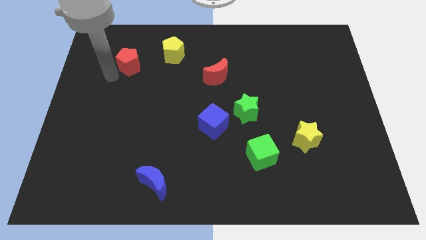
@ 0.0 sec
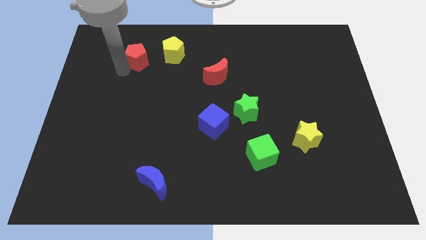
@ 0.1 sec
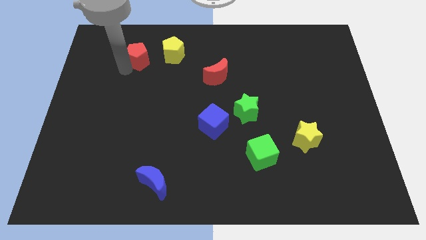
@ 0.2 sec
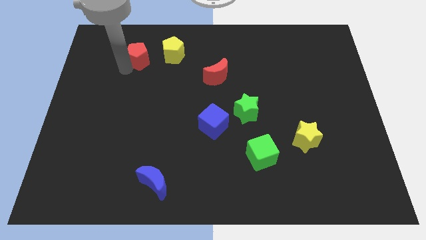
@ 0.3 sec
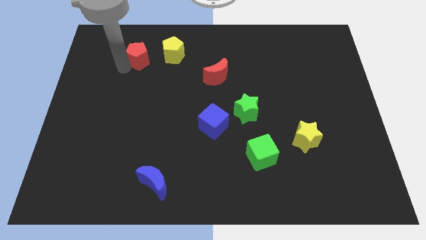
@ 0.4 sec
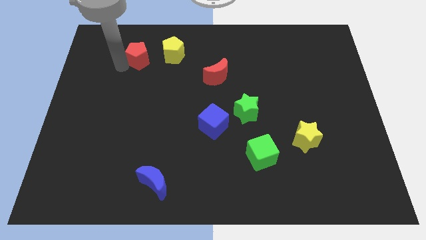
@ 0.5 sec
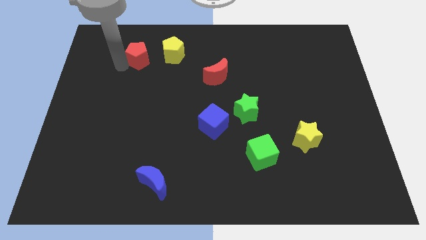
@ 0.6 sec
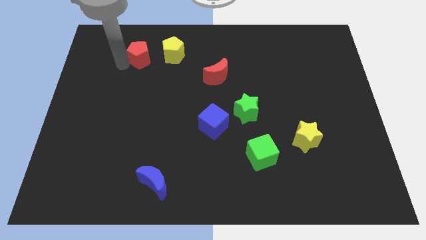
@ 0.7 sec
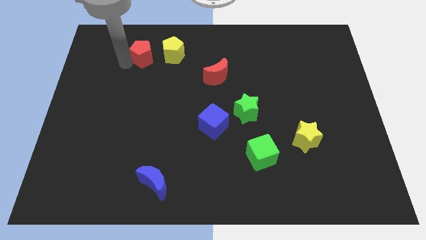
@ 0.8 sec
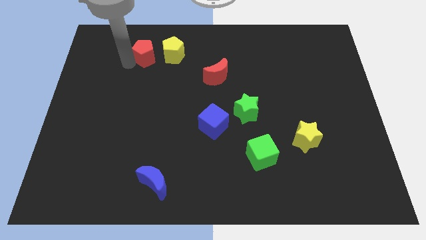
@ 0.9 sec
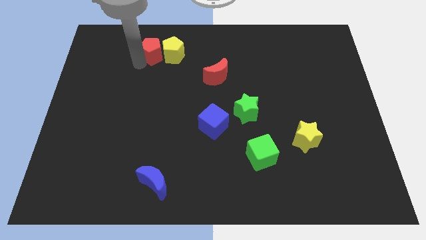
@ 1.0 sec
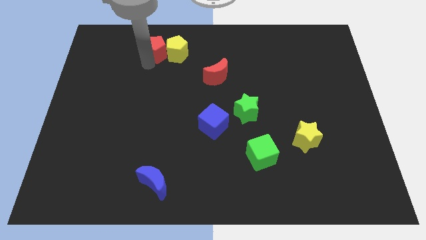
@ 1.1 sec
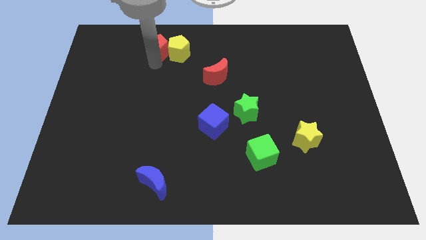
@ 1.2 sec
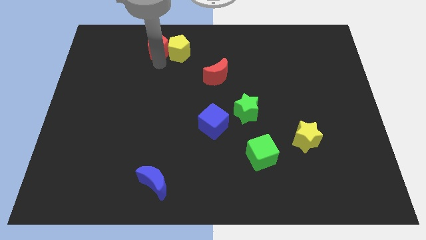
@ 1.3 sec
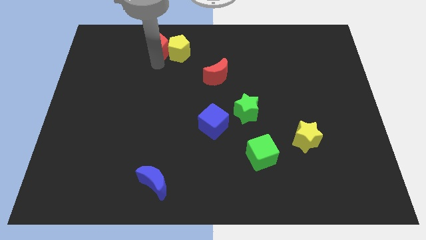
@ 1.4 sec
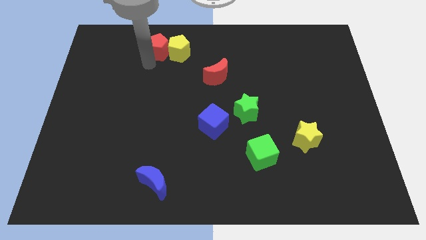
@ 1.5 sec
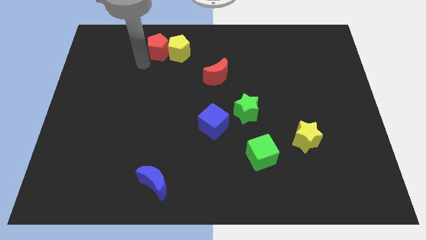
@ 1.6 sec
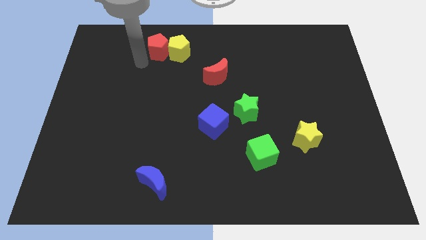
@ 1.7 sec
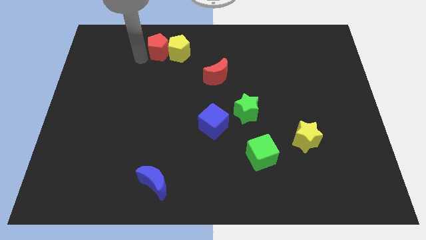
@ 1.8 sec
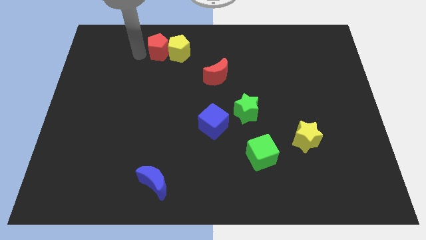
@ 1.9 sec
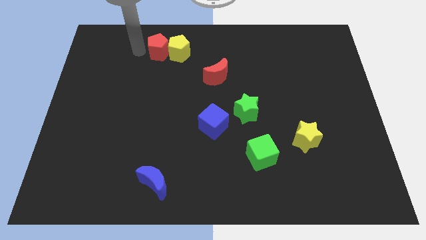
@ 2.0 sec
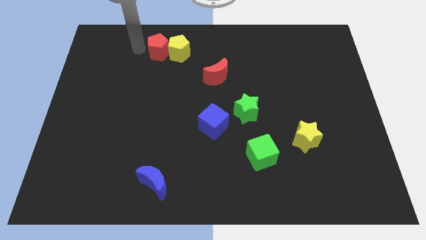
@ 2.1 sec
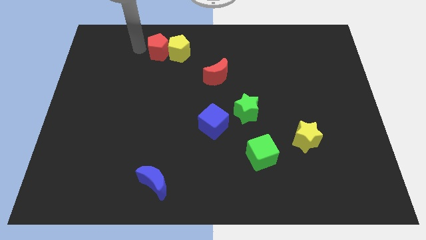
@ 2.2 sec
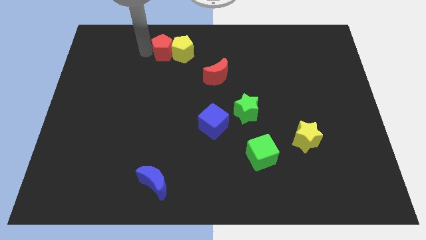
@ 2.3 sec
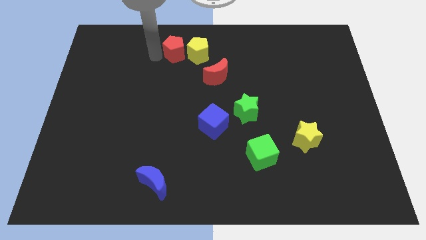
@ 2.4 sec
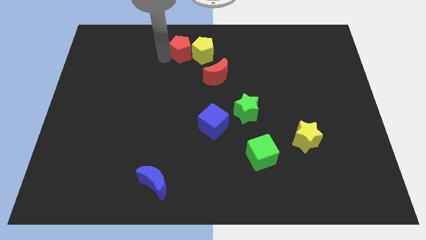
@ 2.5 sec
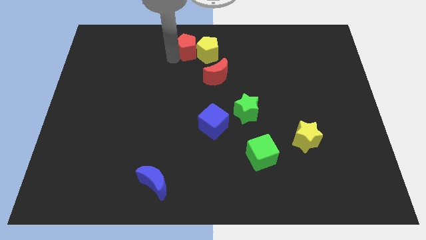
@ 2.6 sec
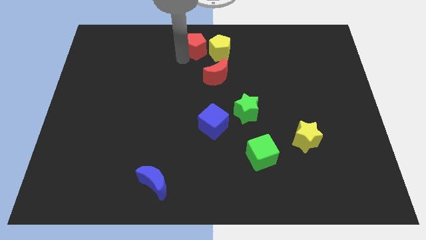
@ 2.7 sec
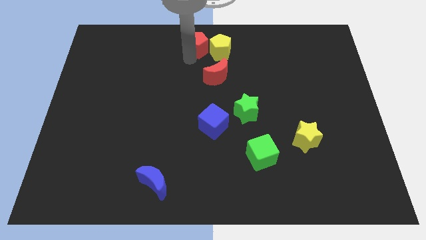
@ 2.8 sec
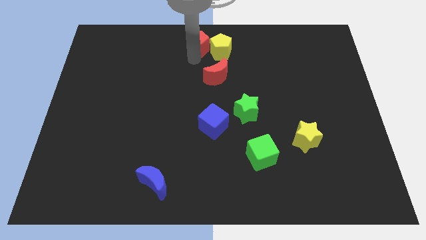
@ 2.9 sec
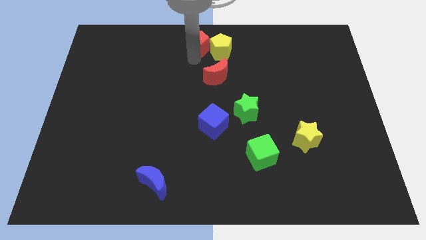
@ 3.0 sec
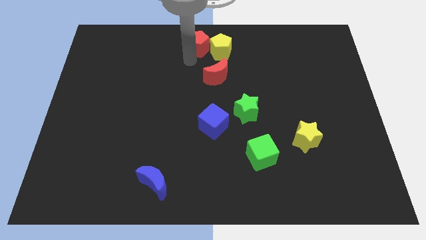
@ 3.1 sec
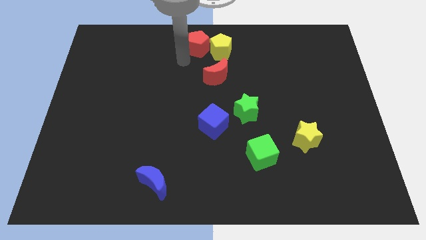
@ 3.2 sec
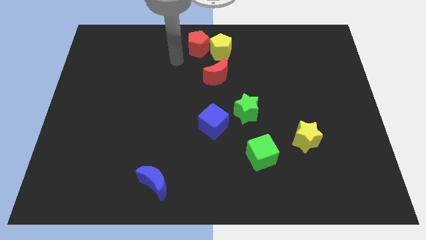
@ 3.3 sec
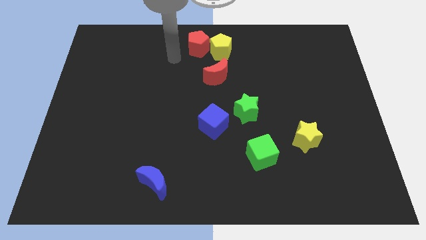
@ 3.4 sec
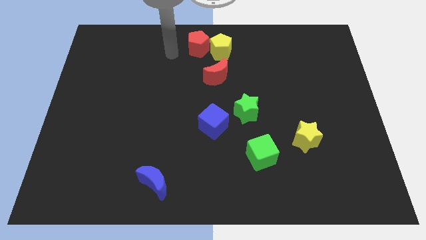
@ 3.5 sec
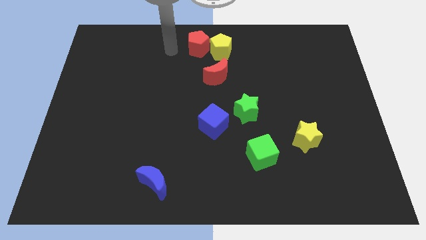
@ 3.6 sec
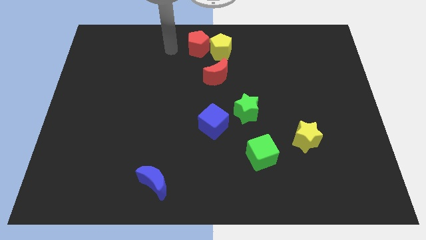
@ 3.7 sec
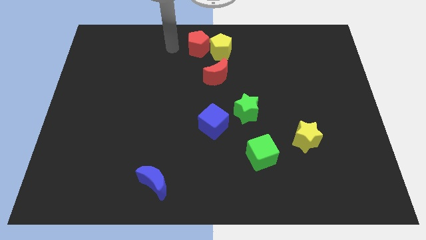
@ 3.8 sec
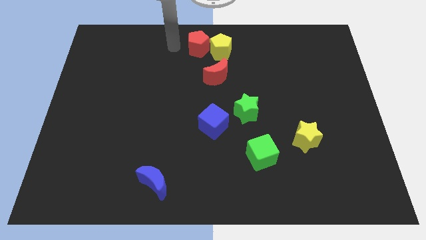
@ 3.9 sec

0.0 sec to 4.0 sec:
push the yellow pentagon with the red pentagon to the top center of the board

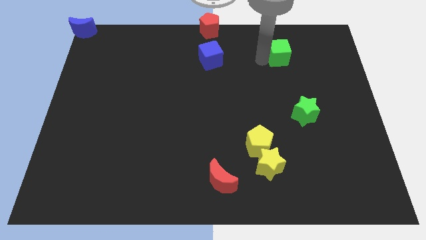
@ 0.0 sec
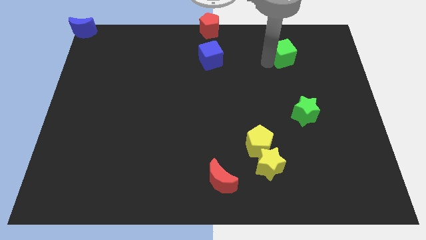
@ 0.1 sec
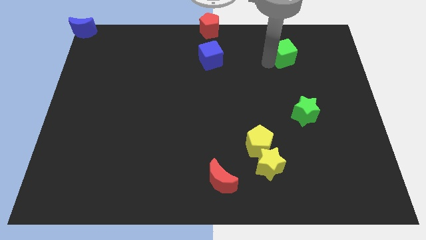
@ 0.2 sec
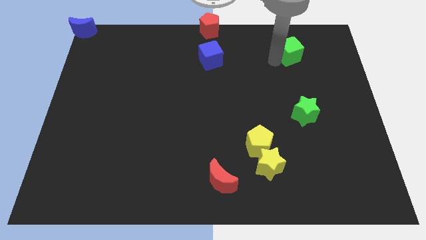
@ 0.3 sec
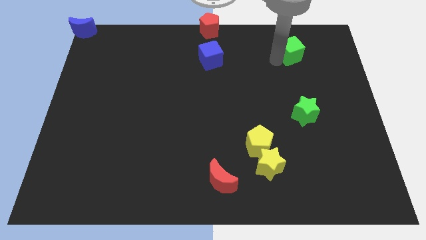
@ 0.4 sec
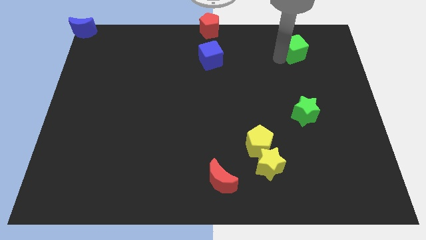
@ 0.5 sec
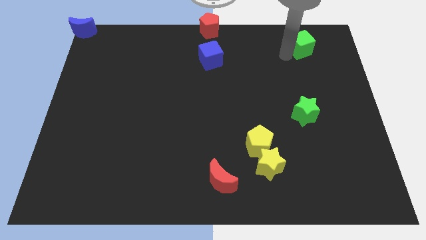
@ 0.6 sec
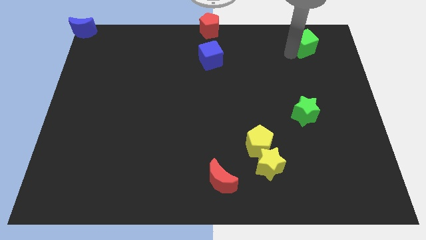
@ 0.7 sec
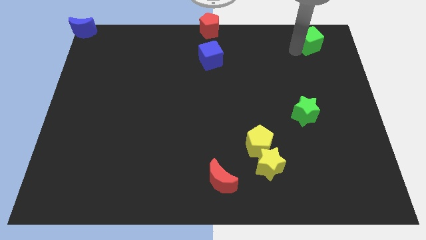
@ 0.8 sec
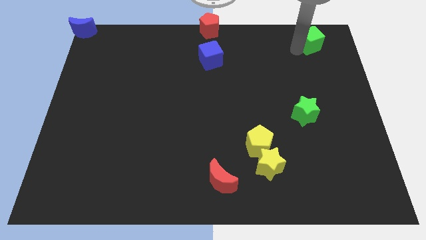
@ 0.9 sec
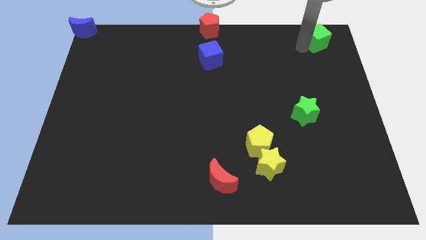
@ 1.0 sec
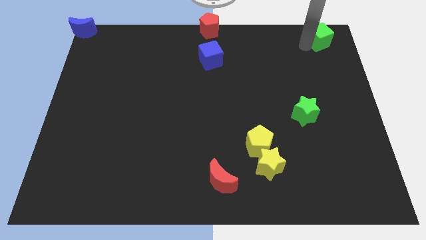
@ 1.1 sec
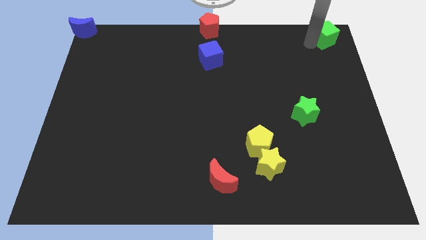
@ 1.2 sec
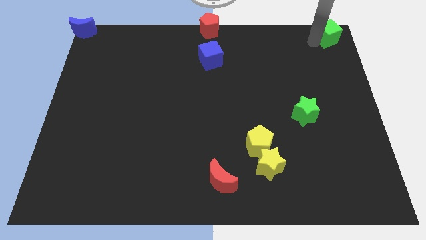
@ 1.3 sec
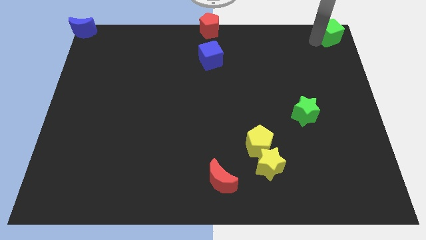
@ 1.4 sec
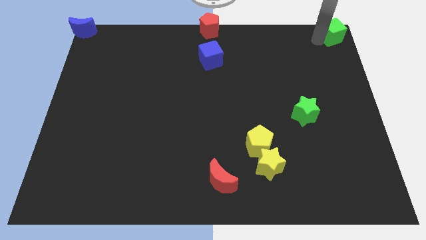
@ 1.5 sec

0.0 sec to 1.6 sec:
move the green cube to the top right corner of the board

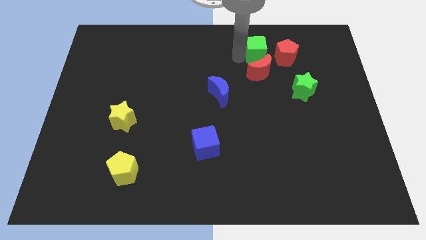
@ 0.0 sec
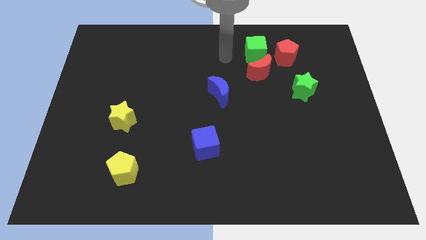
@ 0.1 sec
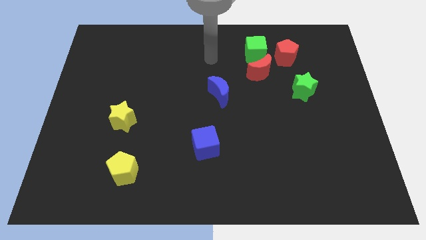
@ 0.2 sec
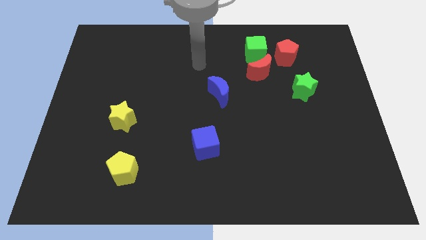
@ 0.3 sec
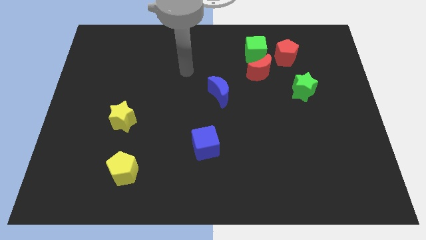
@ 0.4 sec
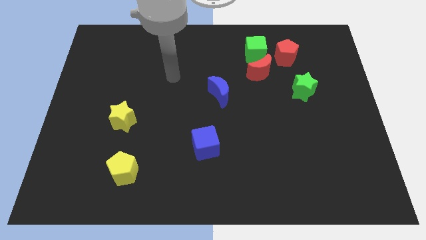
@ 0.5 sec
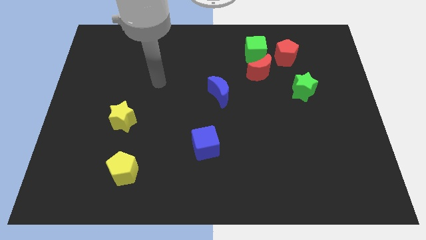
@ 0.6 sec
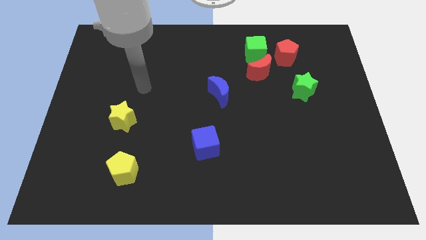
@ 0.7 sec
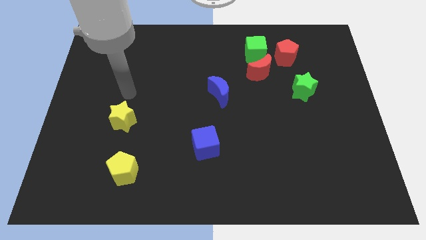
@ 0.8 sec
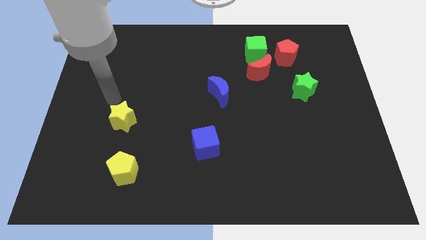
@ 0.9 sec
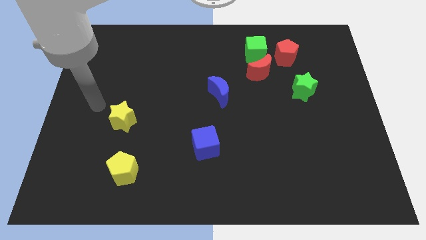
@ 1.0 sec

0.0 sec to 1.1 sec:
move your arm away from green cube

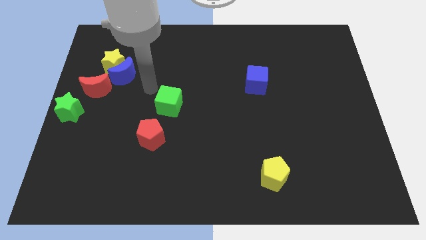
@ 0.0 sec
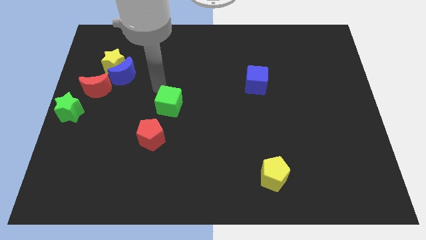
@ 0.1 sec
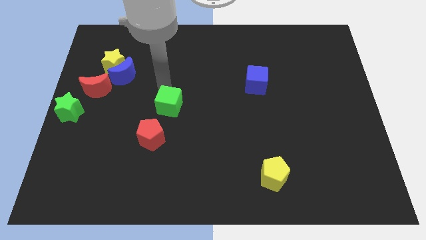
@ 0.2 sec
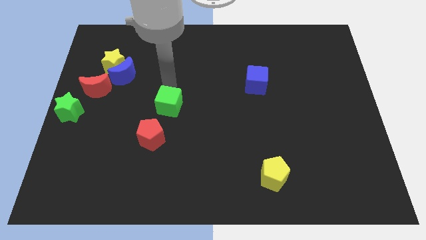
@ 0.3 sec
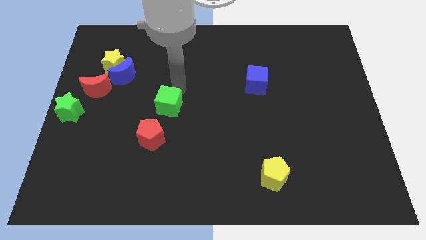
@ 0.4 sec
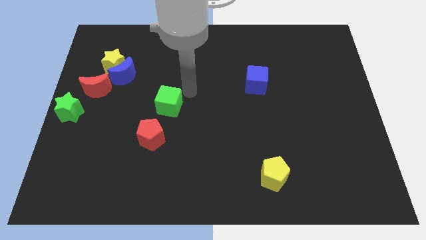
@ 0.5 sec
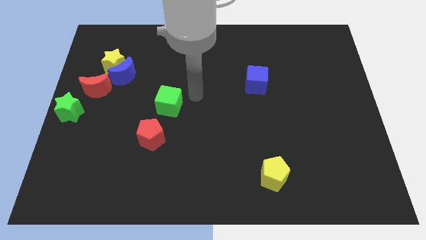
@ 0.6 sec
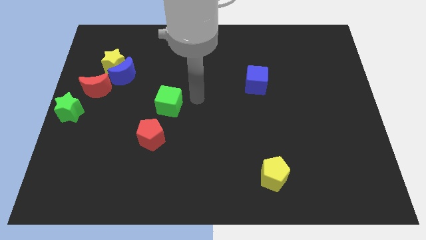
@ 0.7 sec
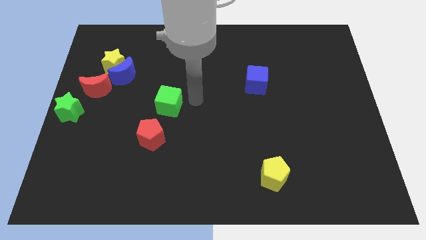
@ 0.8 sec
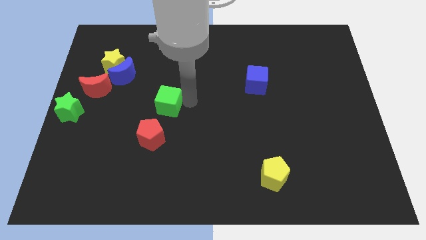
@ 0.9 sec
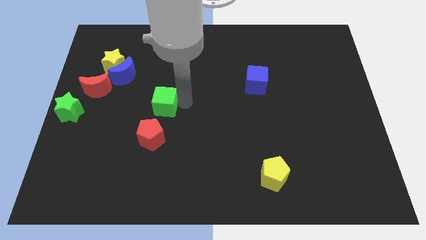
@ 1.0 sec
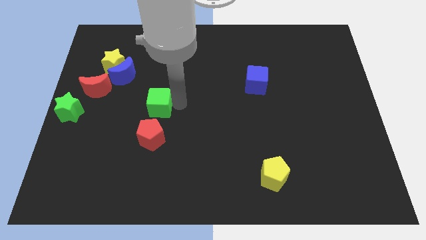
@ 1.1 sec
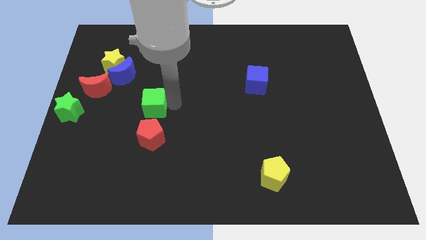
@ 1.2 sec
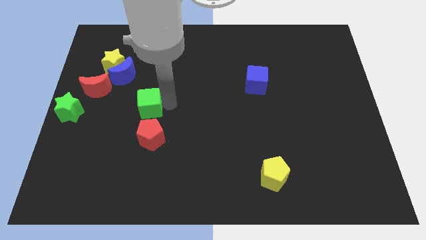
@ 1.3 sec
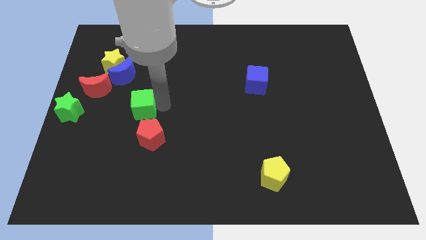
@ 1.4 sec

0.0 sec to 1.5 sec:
push the green cube to the top of red pentagon

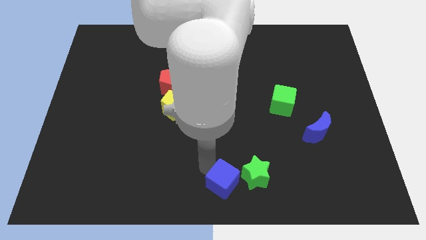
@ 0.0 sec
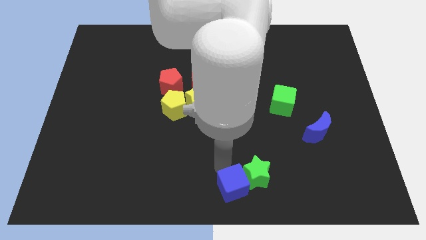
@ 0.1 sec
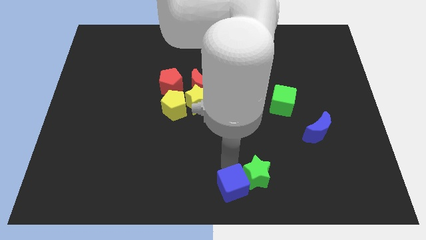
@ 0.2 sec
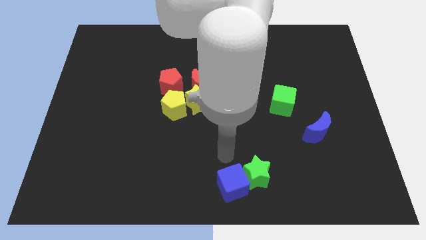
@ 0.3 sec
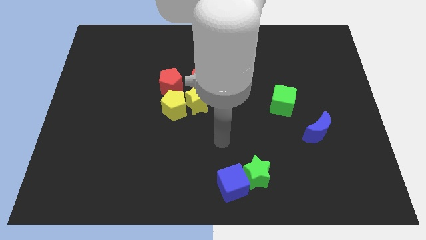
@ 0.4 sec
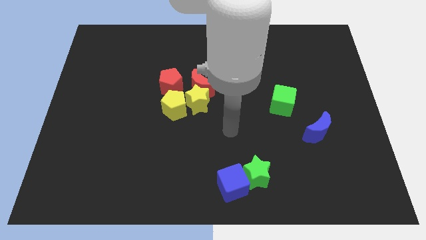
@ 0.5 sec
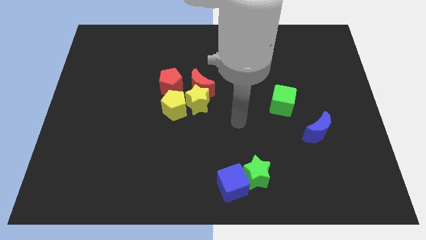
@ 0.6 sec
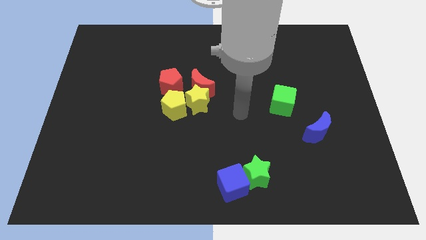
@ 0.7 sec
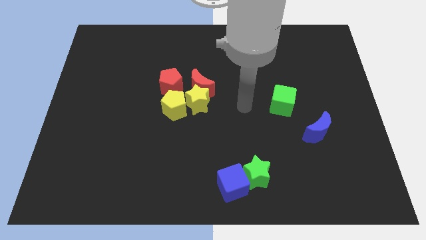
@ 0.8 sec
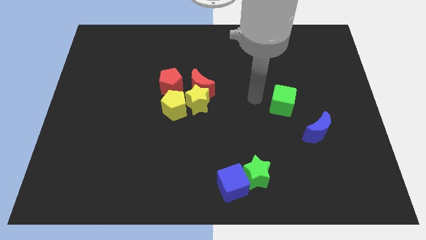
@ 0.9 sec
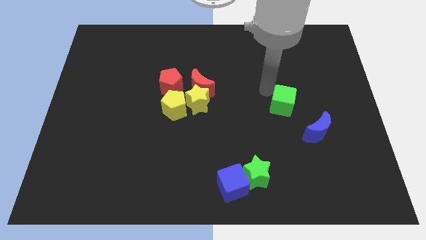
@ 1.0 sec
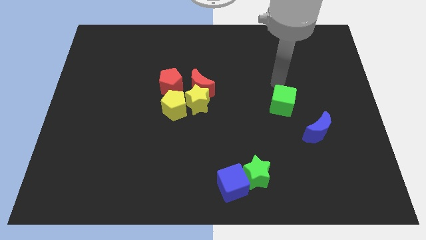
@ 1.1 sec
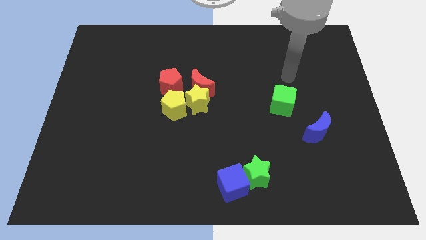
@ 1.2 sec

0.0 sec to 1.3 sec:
move your arm to the top of green cube
